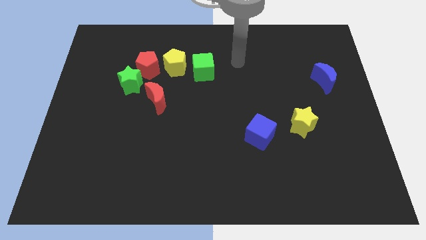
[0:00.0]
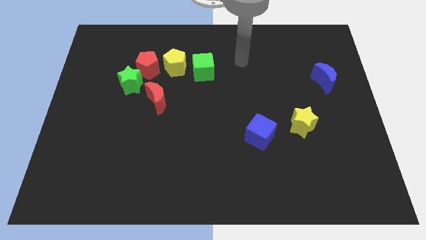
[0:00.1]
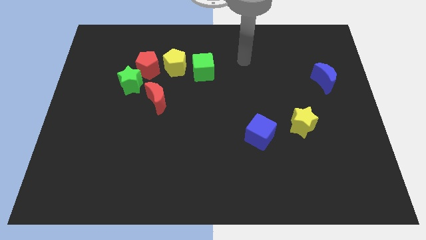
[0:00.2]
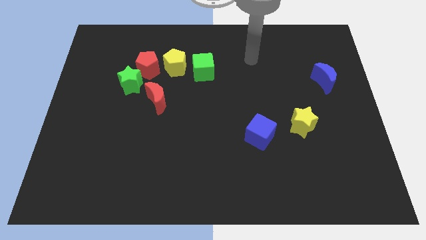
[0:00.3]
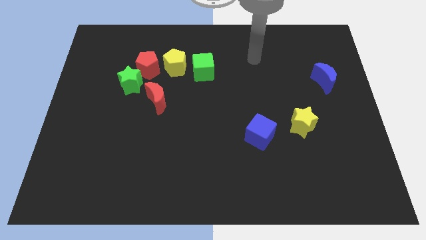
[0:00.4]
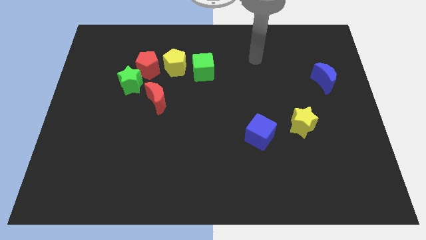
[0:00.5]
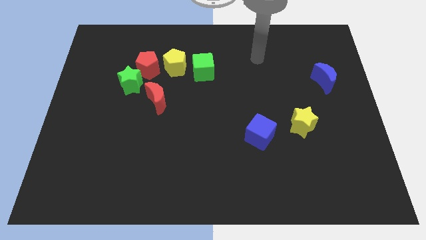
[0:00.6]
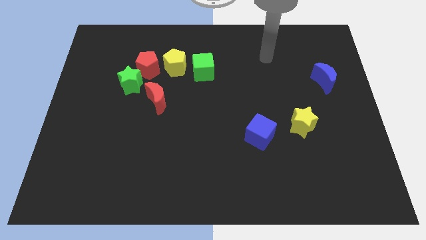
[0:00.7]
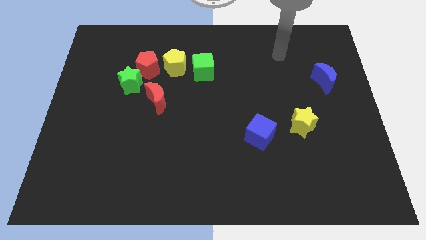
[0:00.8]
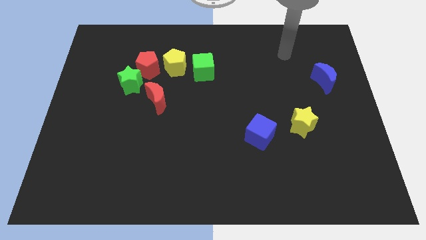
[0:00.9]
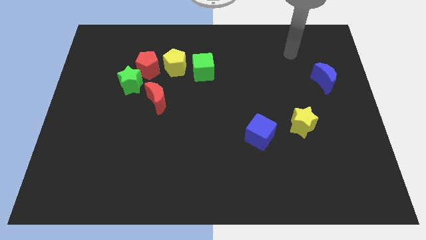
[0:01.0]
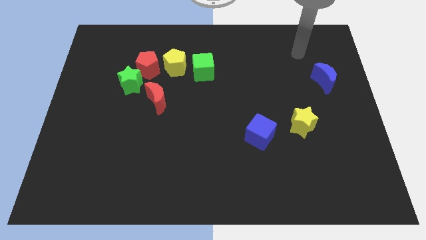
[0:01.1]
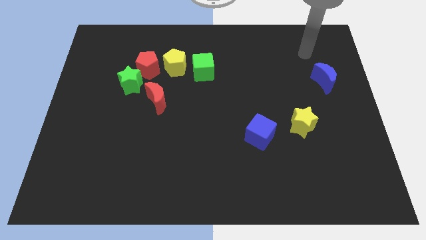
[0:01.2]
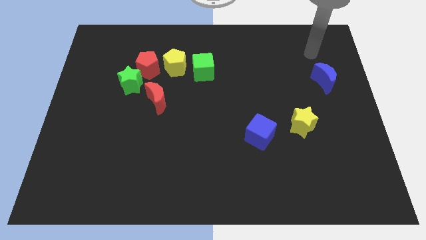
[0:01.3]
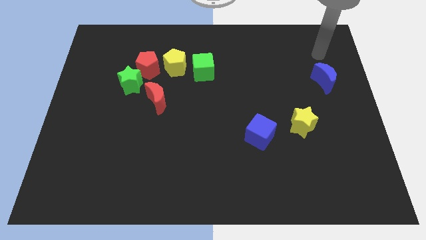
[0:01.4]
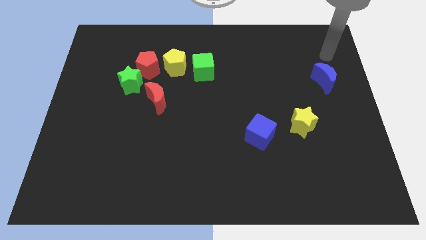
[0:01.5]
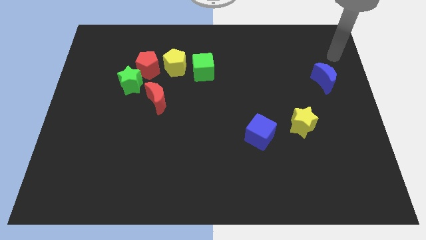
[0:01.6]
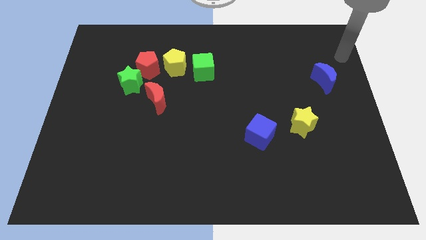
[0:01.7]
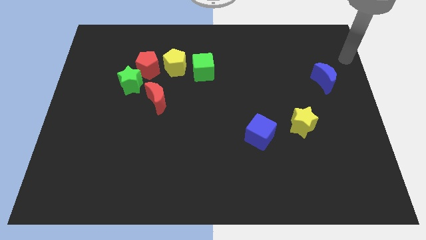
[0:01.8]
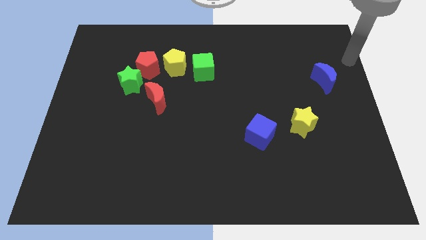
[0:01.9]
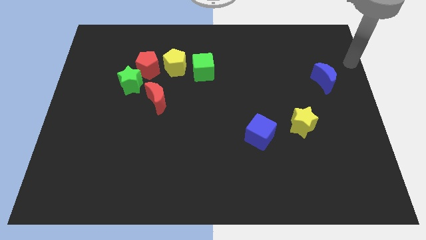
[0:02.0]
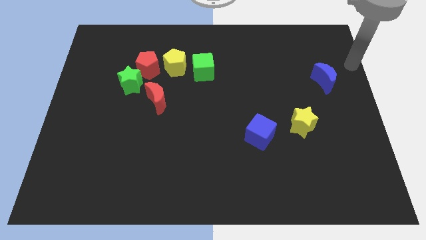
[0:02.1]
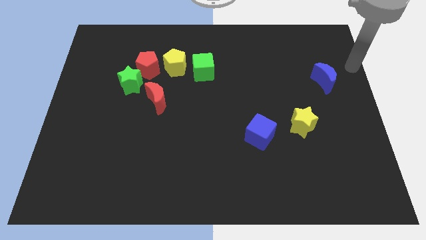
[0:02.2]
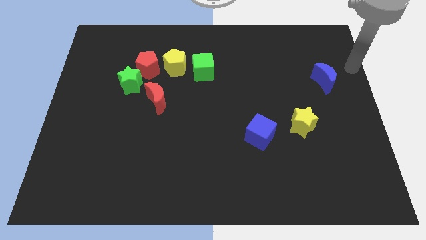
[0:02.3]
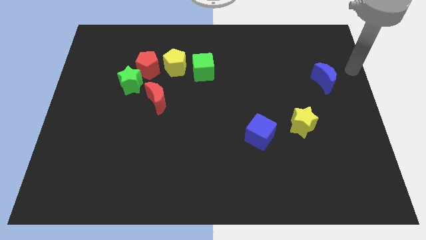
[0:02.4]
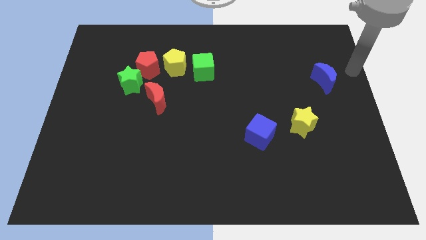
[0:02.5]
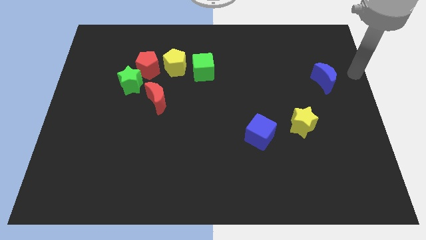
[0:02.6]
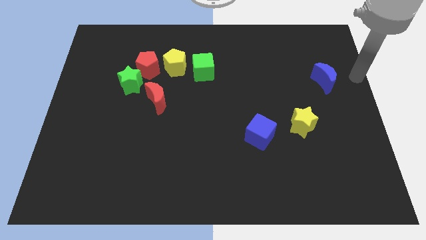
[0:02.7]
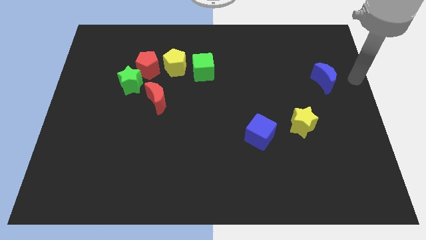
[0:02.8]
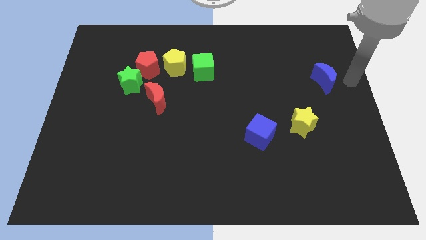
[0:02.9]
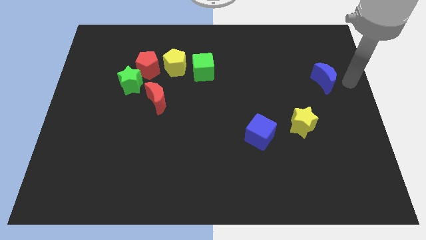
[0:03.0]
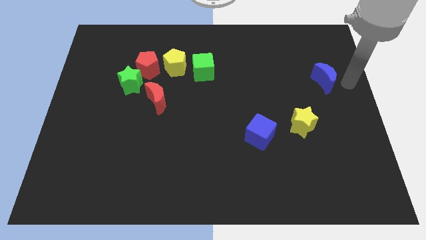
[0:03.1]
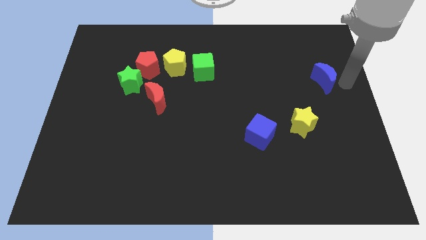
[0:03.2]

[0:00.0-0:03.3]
move your arm towards the blue crescent

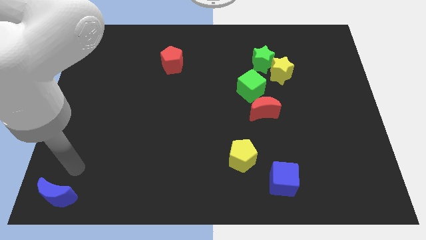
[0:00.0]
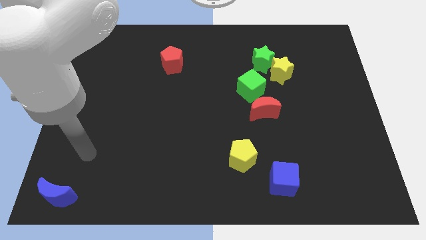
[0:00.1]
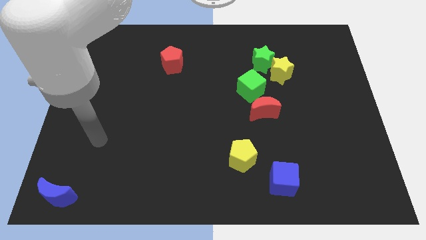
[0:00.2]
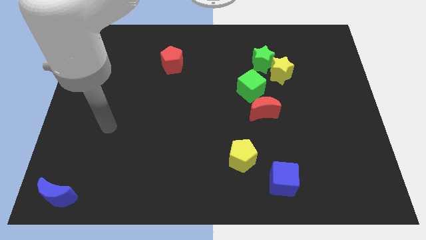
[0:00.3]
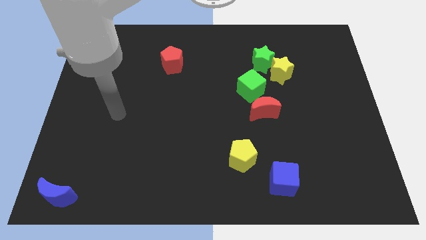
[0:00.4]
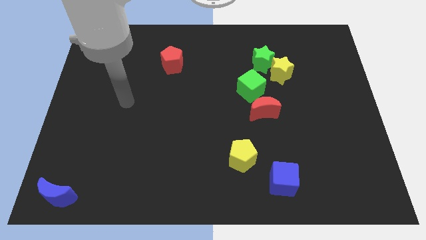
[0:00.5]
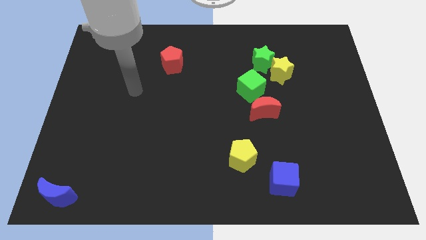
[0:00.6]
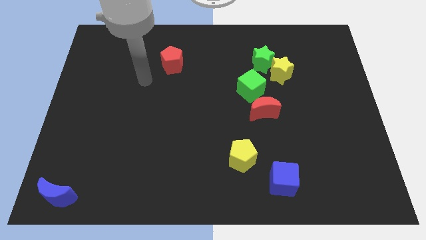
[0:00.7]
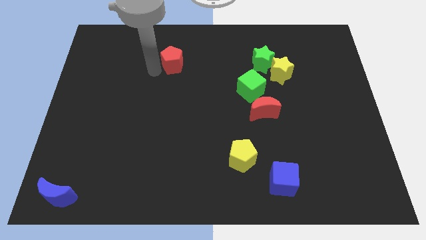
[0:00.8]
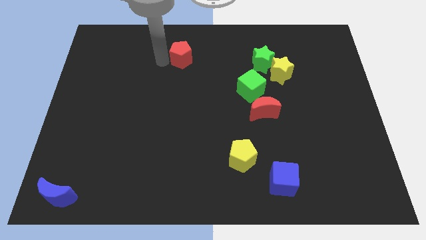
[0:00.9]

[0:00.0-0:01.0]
move your arm to the left of red pentagon

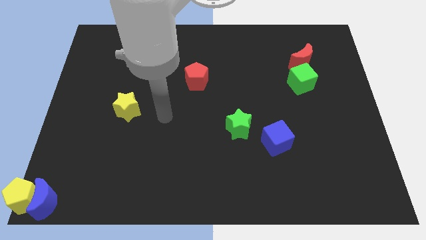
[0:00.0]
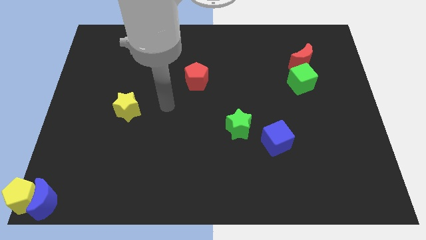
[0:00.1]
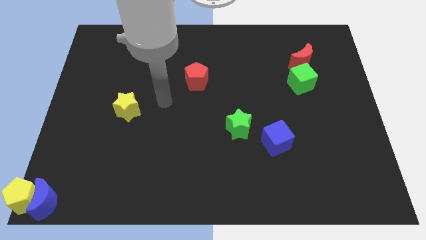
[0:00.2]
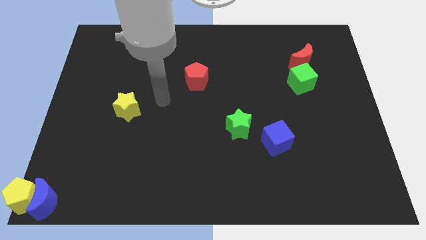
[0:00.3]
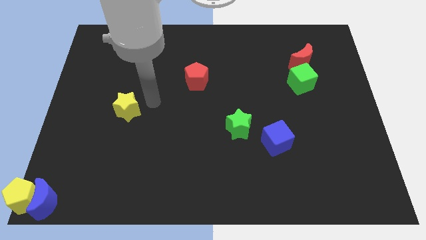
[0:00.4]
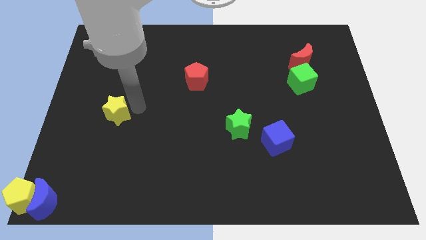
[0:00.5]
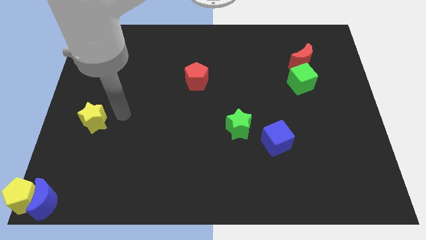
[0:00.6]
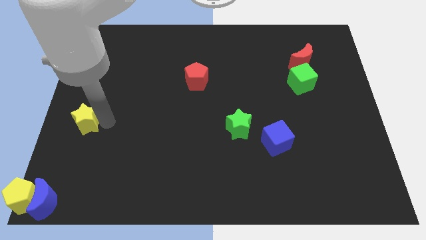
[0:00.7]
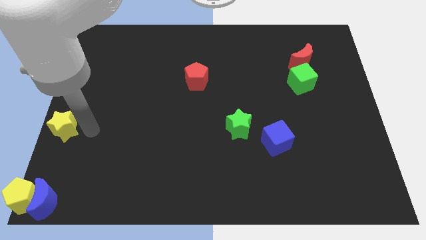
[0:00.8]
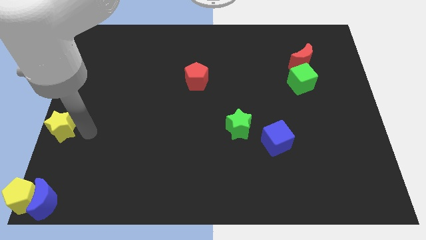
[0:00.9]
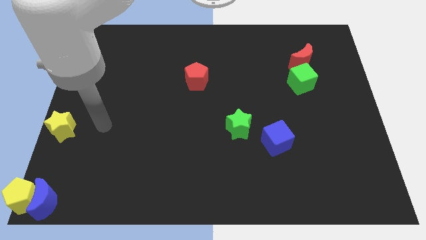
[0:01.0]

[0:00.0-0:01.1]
place yellow star at the center left

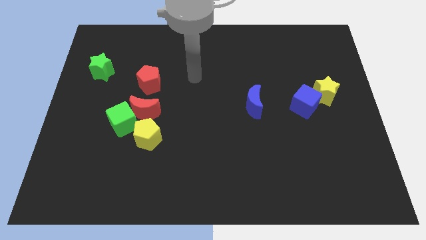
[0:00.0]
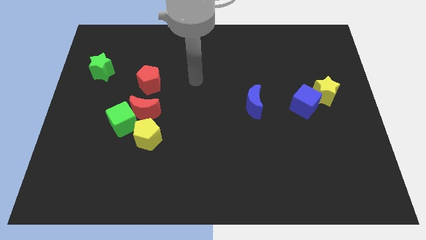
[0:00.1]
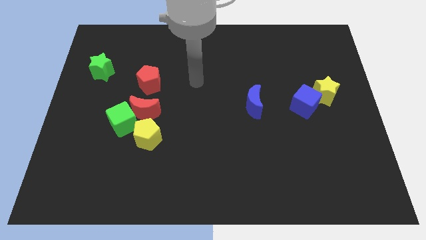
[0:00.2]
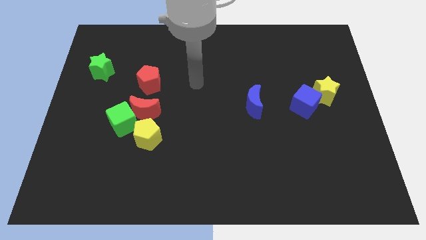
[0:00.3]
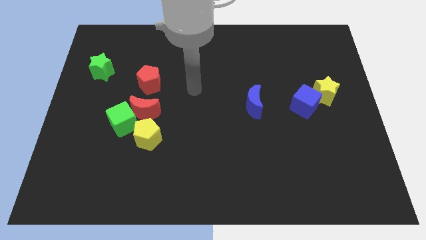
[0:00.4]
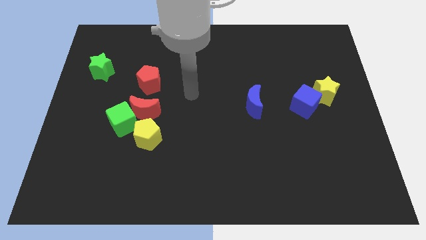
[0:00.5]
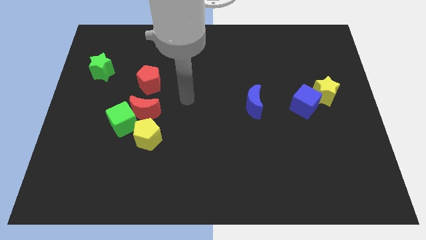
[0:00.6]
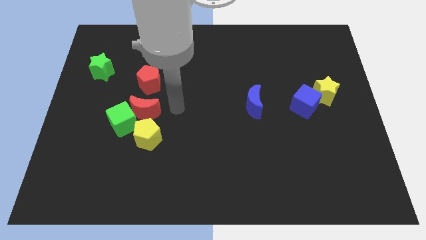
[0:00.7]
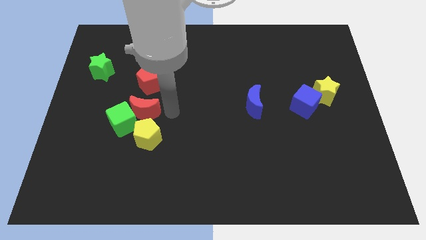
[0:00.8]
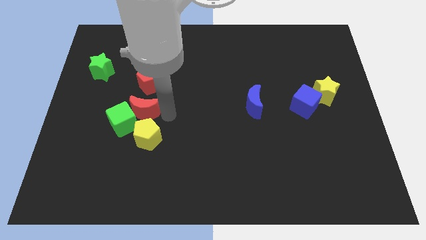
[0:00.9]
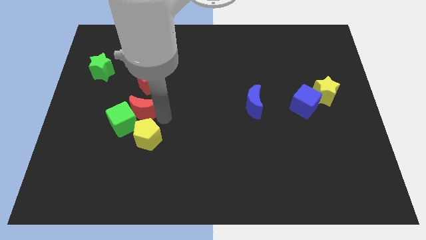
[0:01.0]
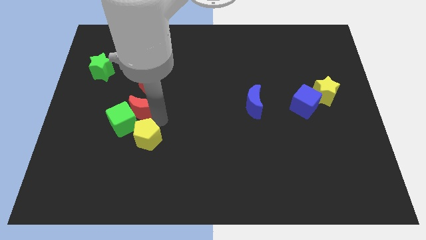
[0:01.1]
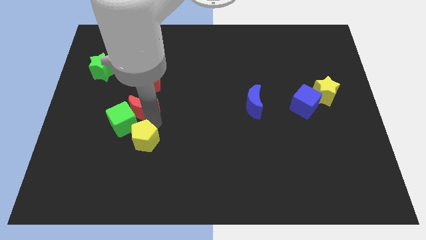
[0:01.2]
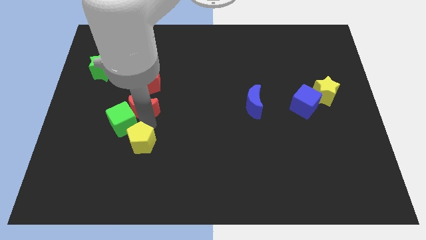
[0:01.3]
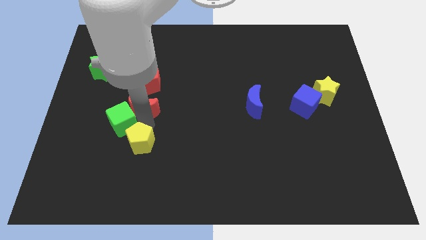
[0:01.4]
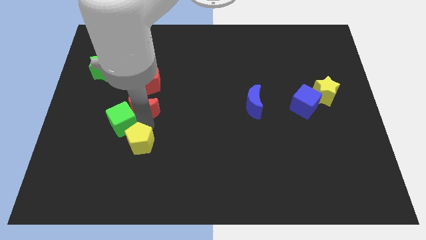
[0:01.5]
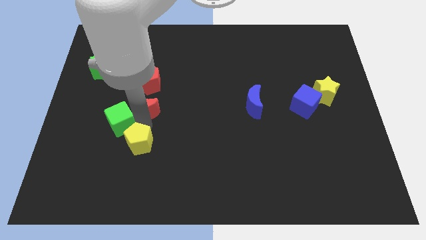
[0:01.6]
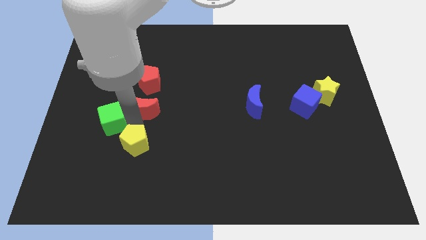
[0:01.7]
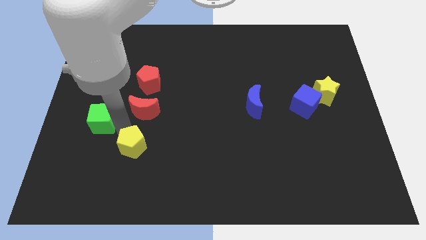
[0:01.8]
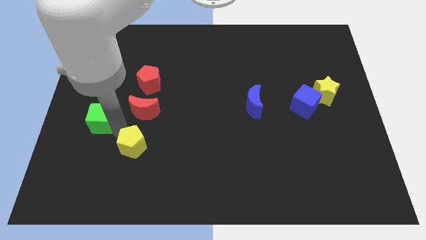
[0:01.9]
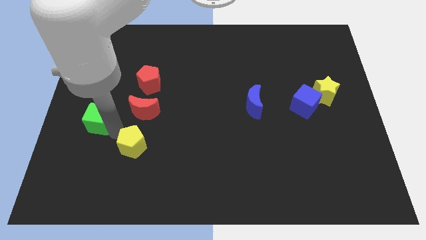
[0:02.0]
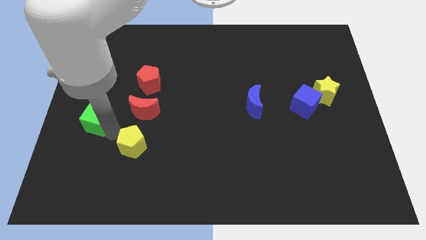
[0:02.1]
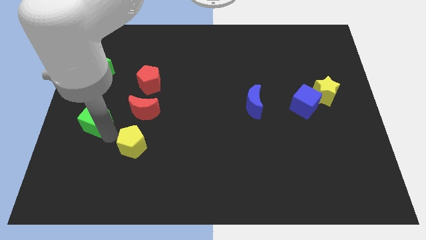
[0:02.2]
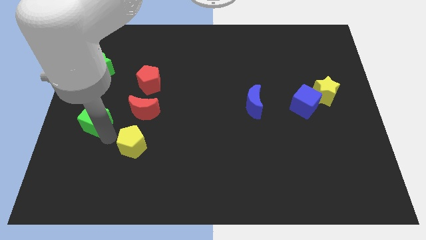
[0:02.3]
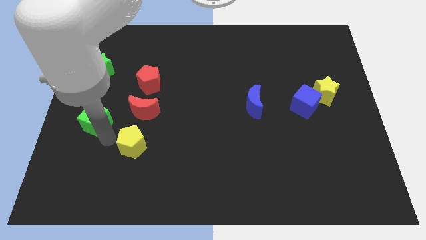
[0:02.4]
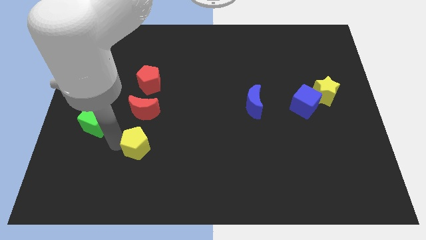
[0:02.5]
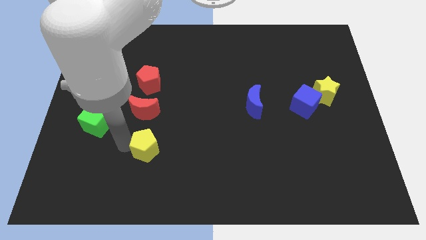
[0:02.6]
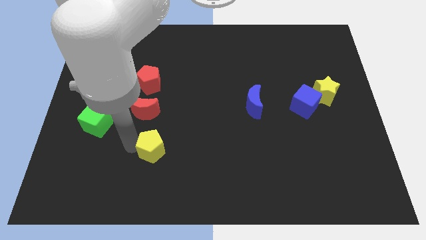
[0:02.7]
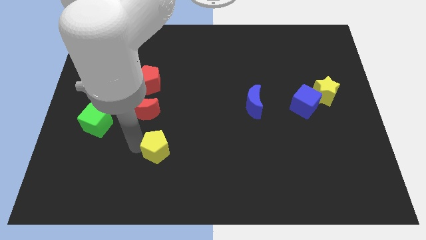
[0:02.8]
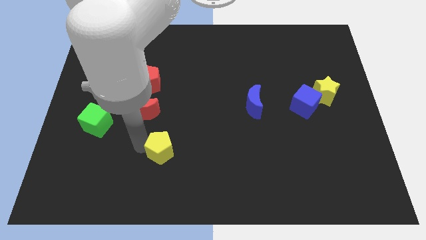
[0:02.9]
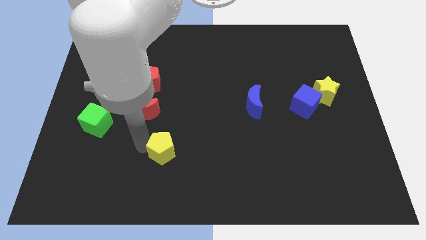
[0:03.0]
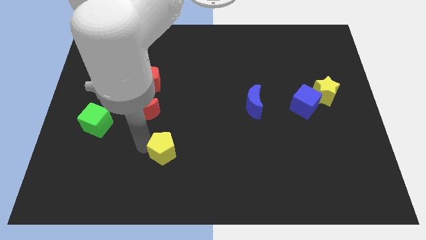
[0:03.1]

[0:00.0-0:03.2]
point your arm between green cube and yellow pentagon

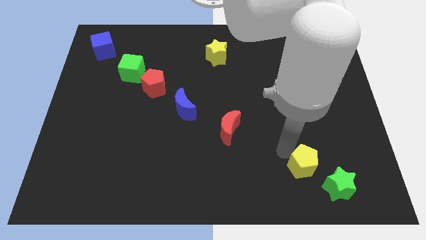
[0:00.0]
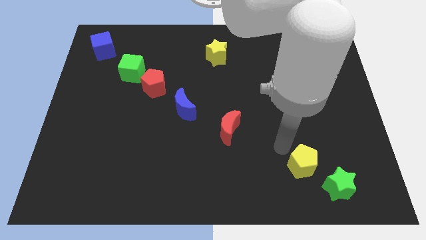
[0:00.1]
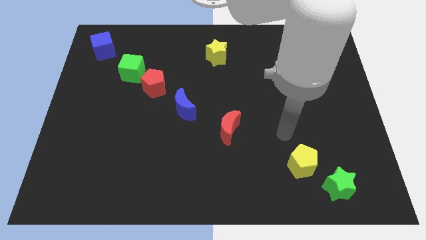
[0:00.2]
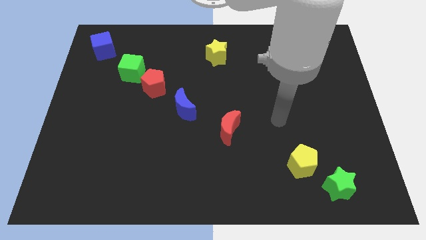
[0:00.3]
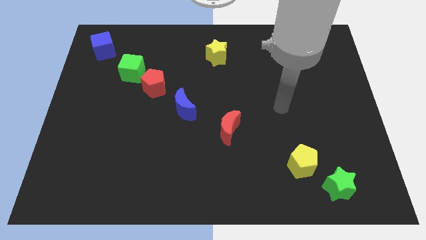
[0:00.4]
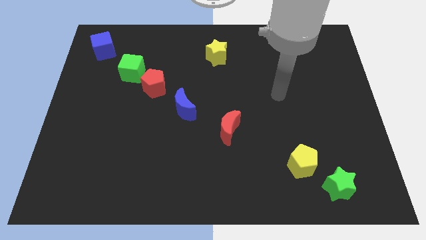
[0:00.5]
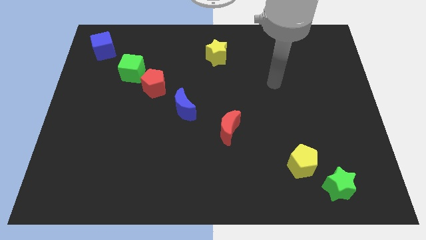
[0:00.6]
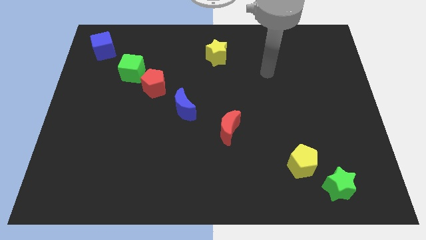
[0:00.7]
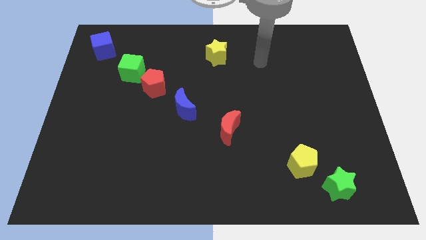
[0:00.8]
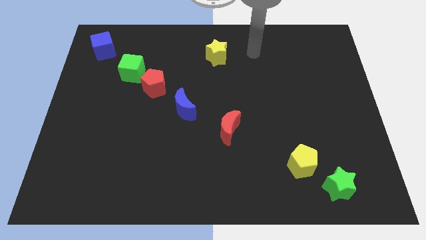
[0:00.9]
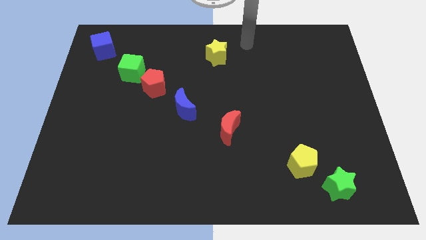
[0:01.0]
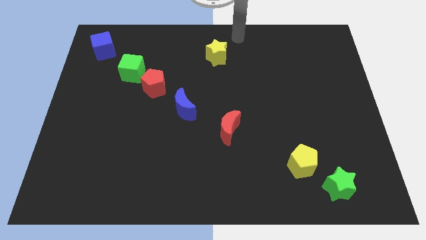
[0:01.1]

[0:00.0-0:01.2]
go away from the yellow pentagon
